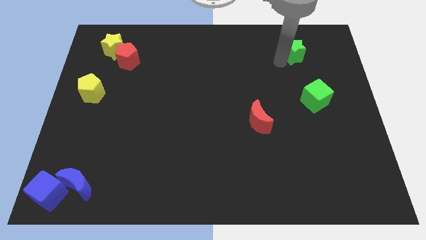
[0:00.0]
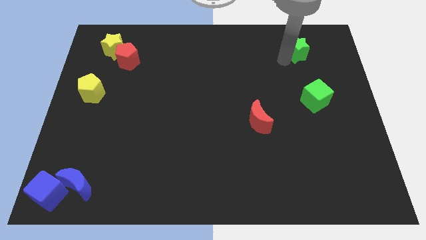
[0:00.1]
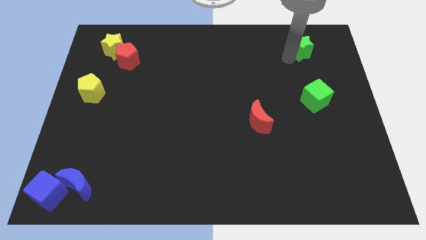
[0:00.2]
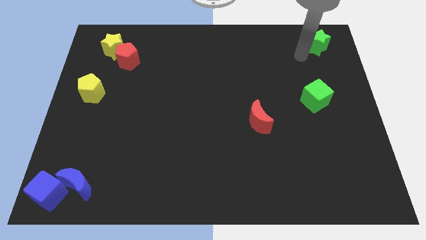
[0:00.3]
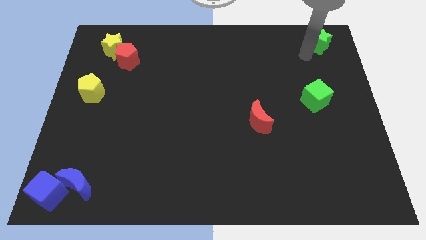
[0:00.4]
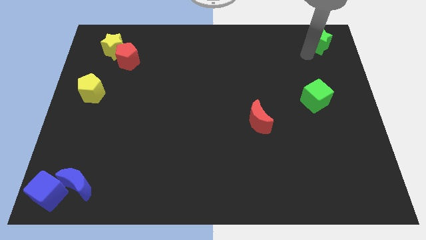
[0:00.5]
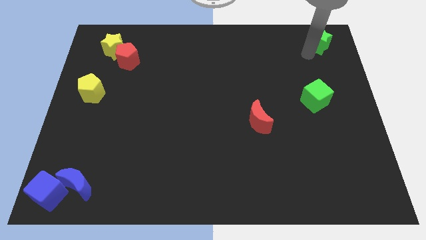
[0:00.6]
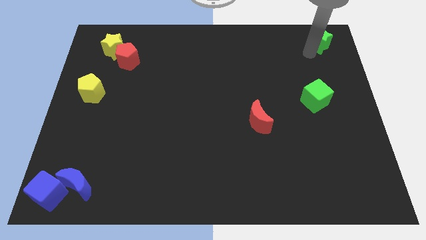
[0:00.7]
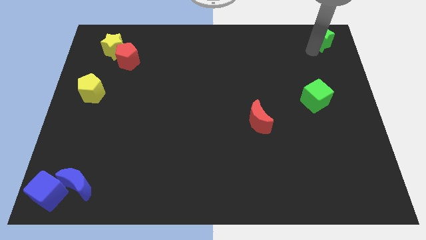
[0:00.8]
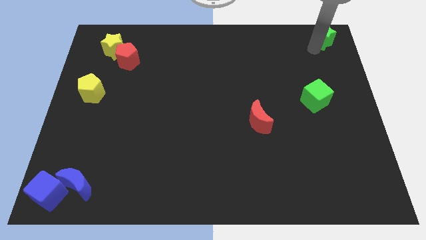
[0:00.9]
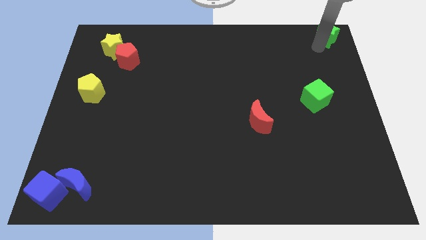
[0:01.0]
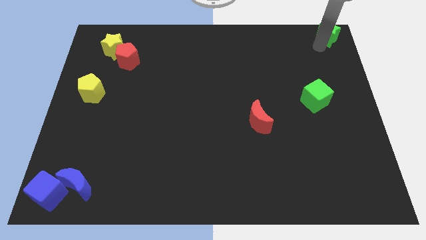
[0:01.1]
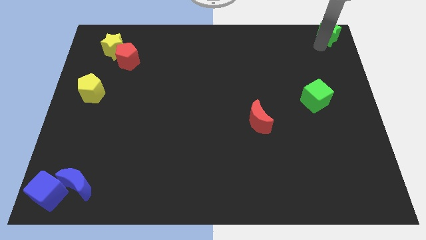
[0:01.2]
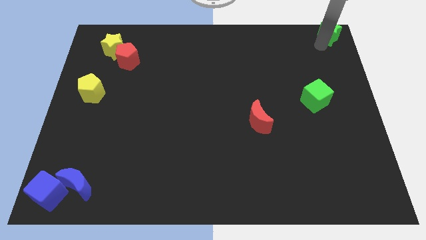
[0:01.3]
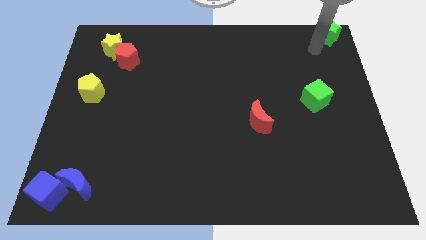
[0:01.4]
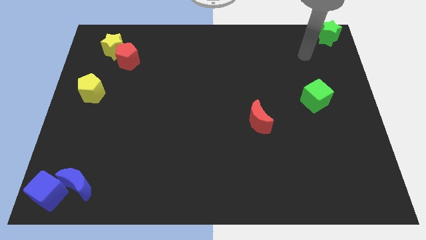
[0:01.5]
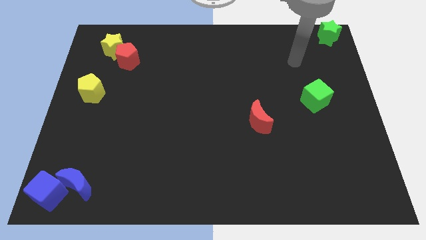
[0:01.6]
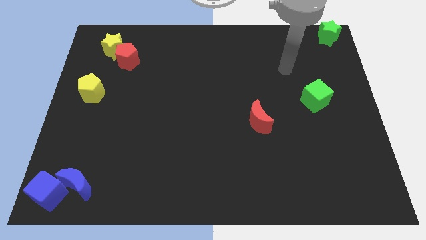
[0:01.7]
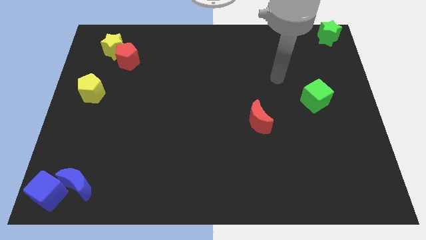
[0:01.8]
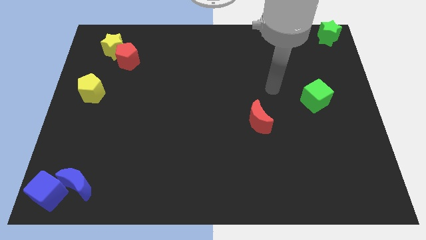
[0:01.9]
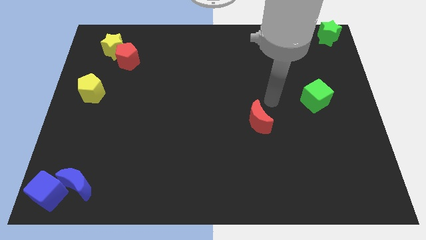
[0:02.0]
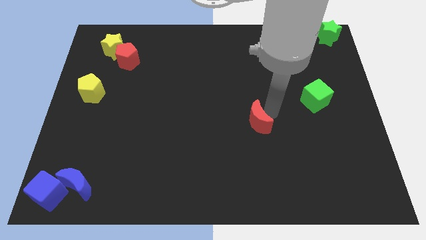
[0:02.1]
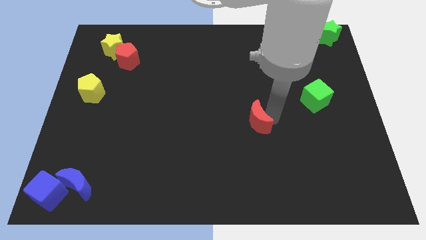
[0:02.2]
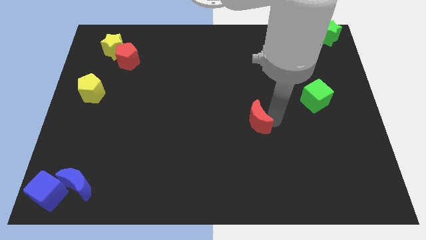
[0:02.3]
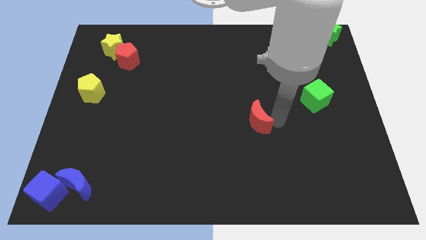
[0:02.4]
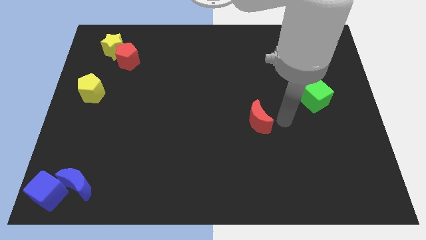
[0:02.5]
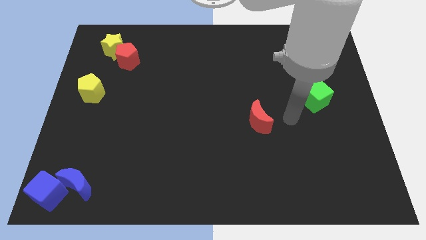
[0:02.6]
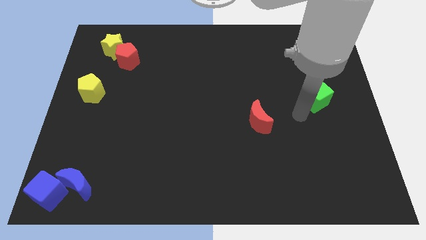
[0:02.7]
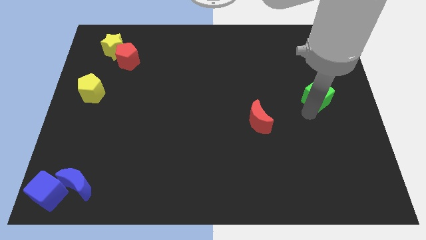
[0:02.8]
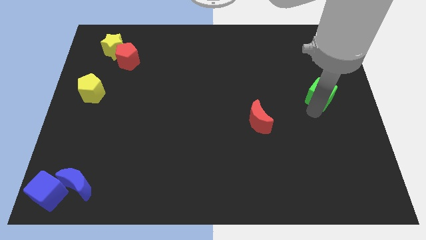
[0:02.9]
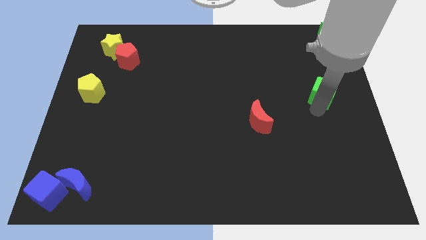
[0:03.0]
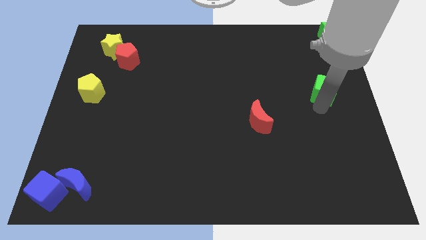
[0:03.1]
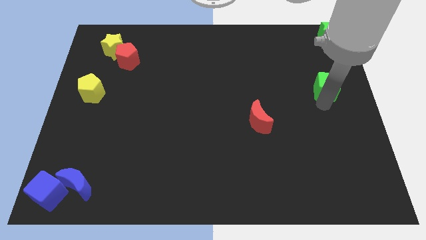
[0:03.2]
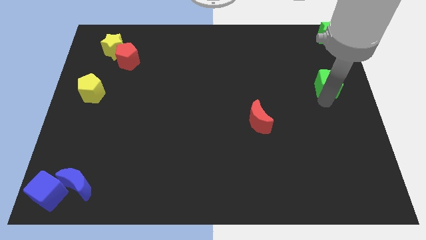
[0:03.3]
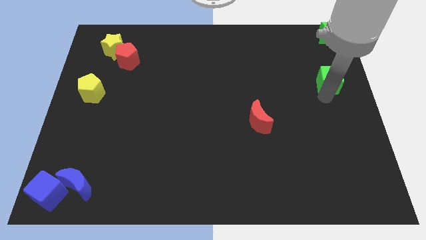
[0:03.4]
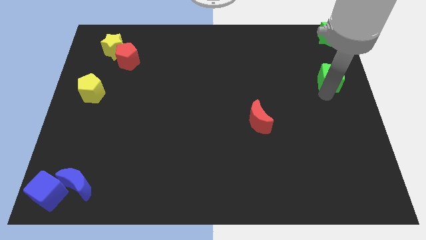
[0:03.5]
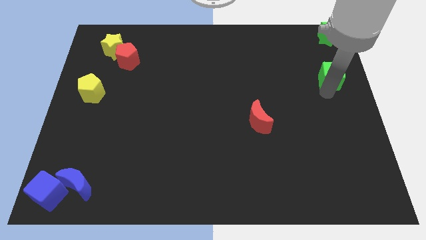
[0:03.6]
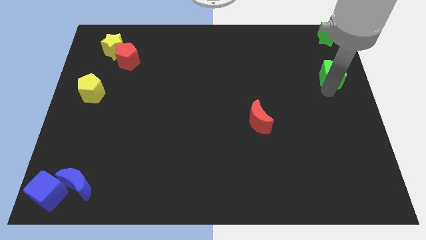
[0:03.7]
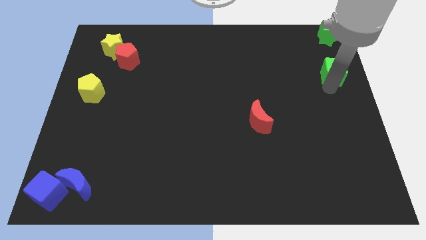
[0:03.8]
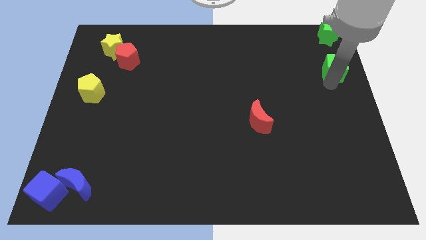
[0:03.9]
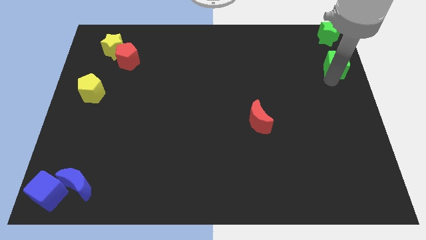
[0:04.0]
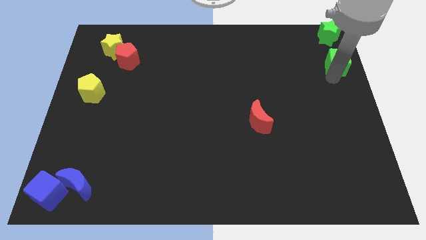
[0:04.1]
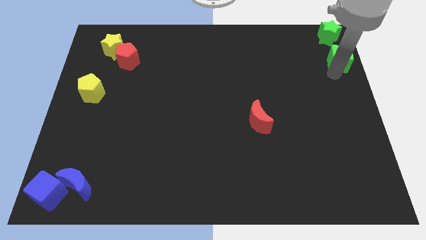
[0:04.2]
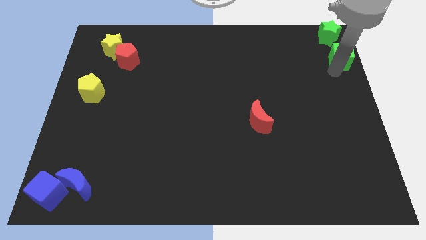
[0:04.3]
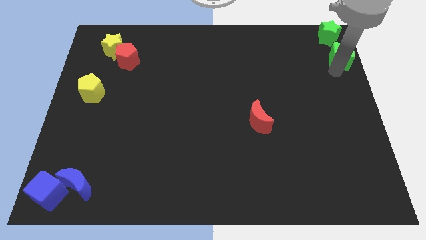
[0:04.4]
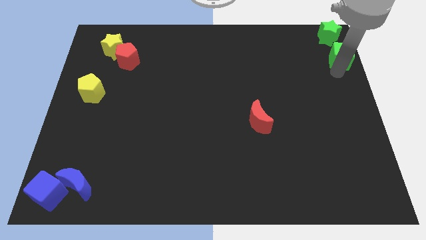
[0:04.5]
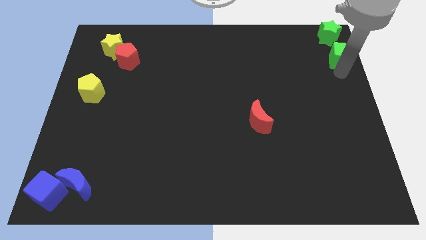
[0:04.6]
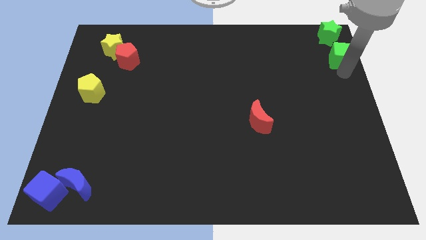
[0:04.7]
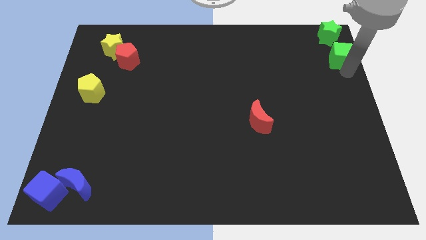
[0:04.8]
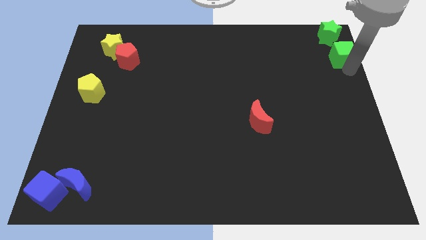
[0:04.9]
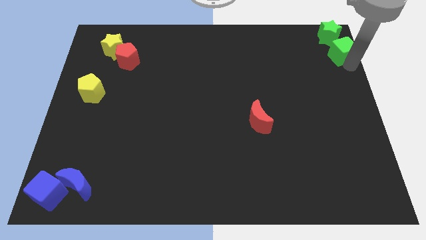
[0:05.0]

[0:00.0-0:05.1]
move the green blocks towards top right corner

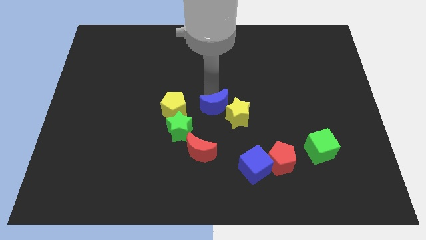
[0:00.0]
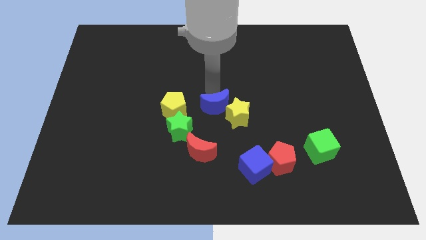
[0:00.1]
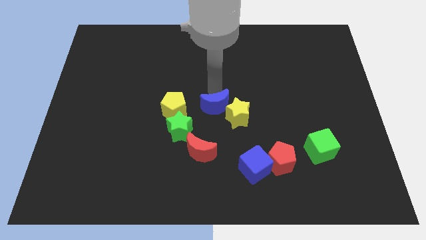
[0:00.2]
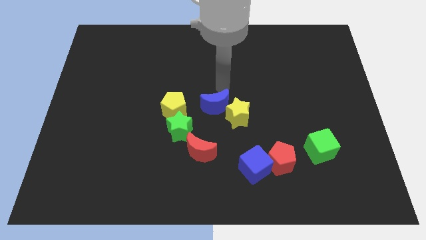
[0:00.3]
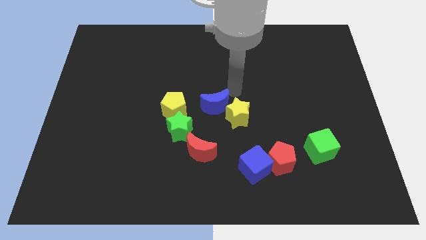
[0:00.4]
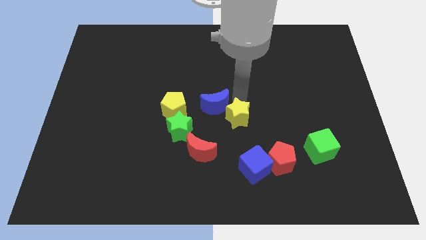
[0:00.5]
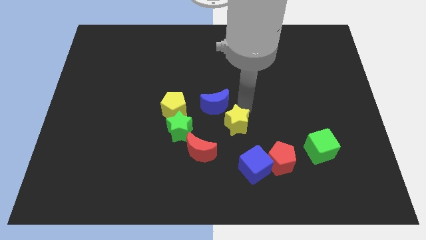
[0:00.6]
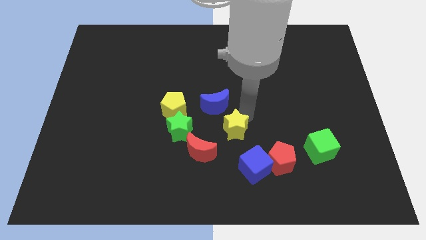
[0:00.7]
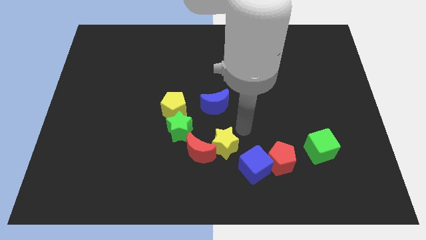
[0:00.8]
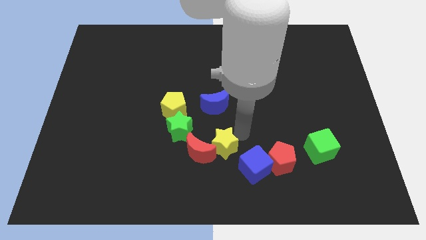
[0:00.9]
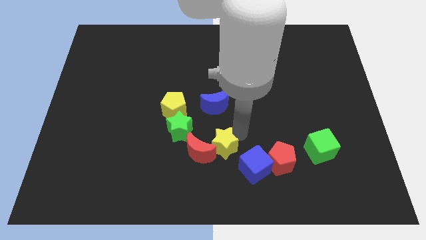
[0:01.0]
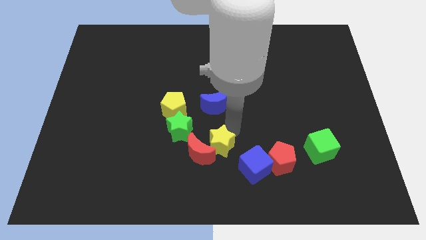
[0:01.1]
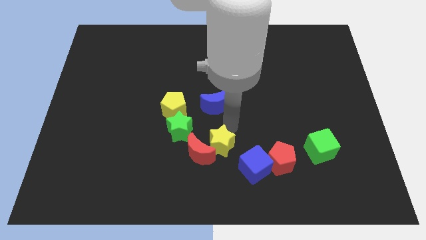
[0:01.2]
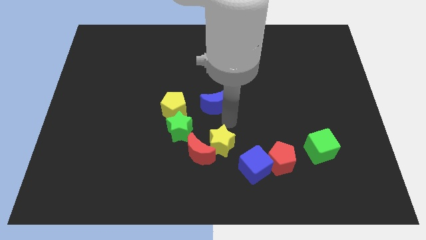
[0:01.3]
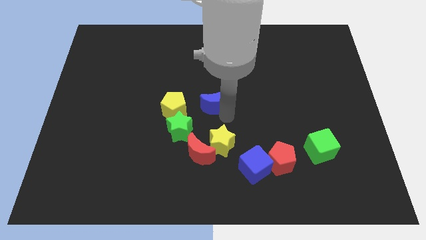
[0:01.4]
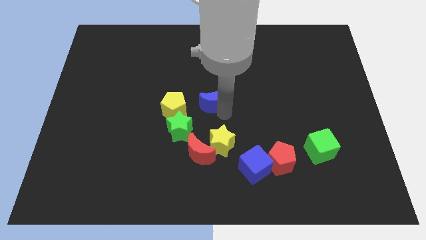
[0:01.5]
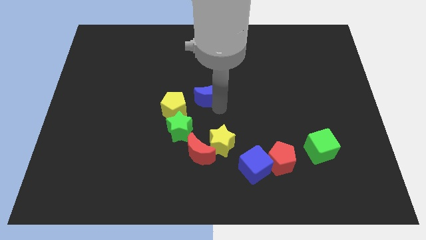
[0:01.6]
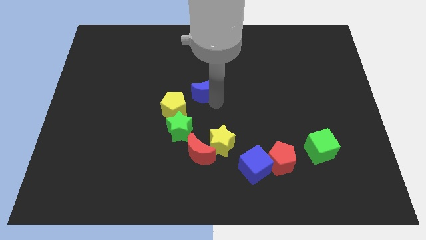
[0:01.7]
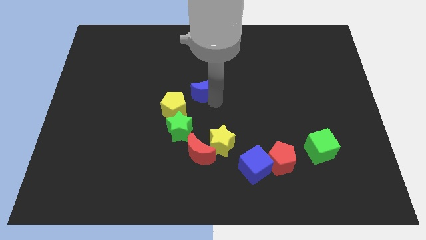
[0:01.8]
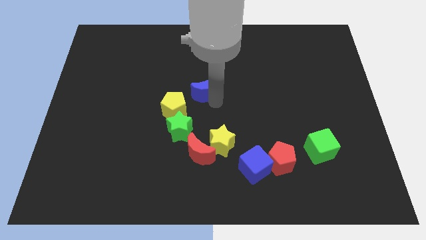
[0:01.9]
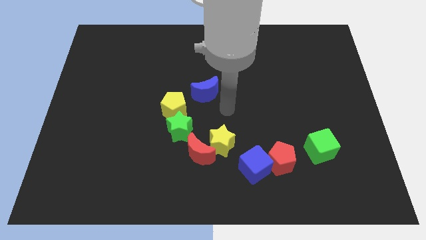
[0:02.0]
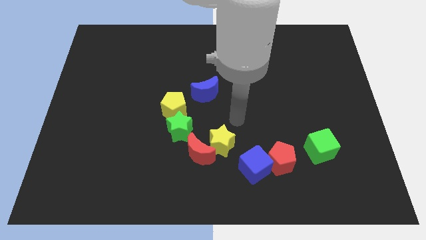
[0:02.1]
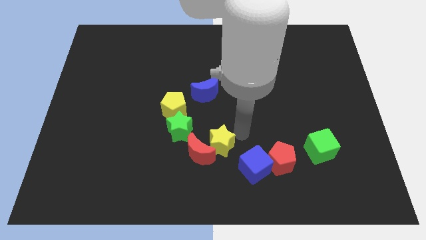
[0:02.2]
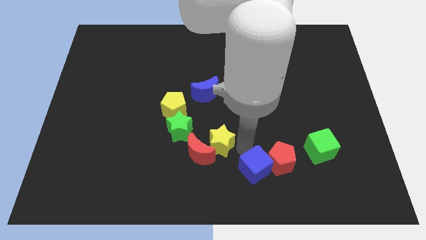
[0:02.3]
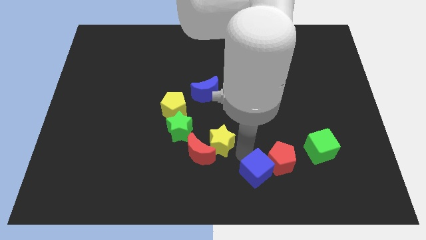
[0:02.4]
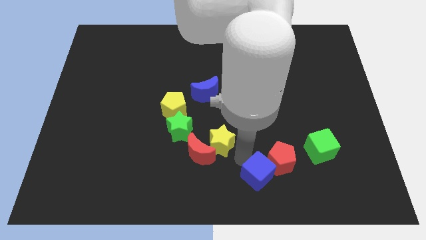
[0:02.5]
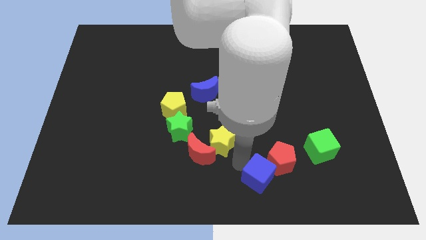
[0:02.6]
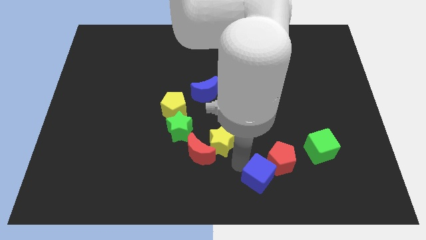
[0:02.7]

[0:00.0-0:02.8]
separate the blue moon and yellow star

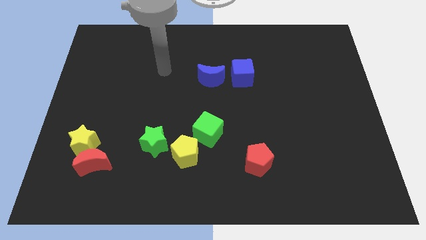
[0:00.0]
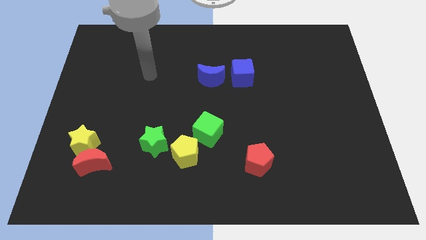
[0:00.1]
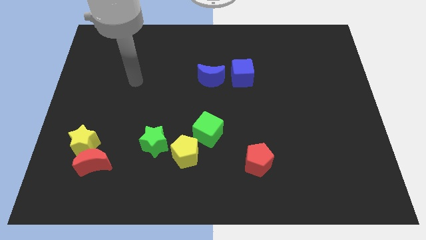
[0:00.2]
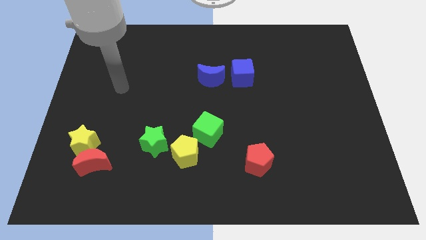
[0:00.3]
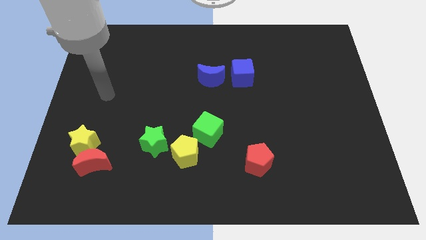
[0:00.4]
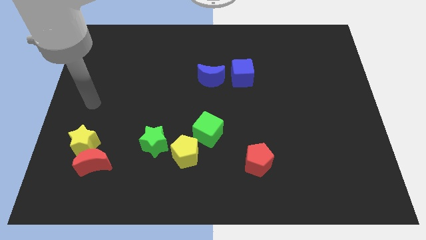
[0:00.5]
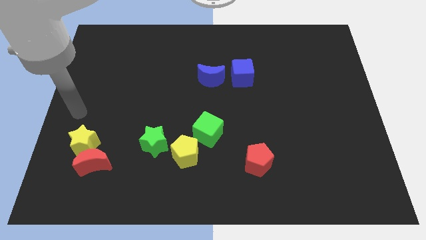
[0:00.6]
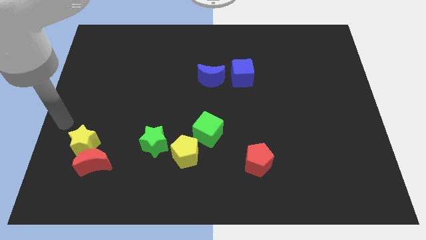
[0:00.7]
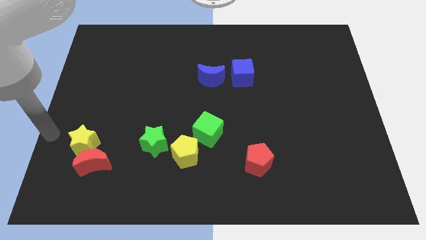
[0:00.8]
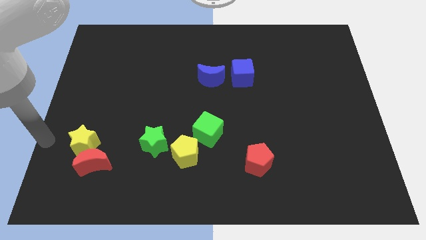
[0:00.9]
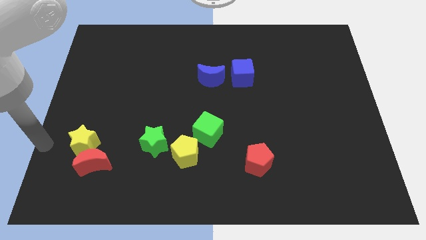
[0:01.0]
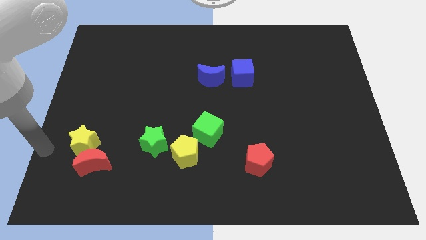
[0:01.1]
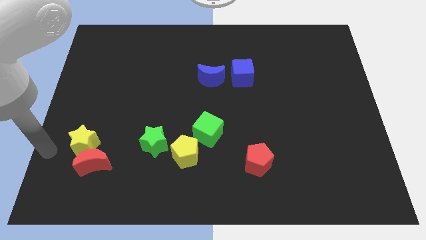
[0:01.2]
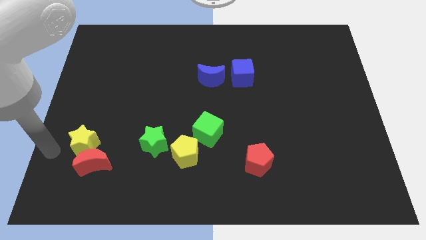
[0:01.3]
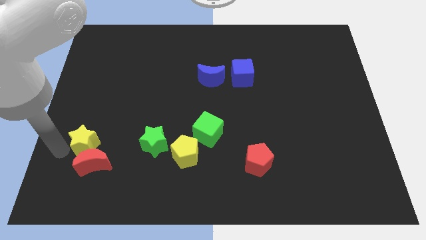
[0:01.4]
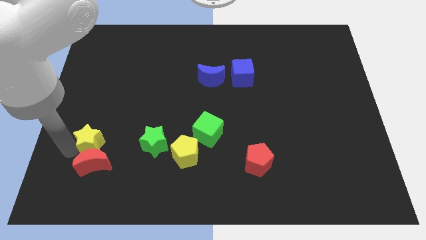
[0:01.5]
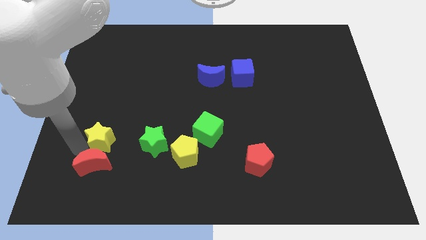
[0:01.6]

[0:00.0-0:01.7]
place the yellow star slightly to the right
